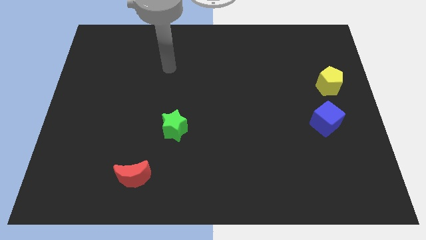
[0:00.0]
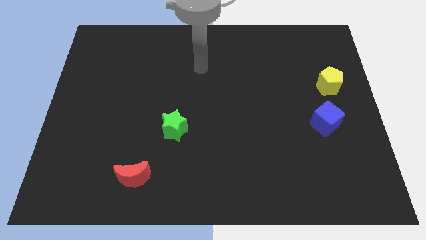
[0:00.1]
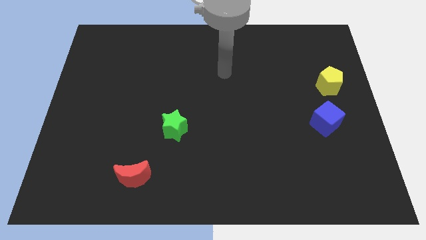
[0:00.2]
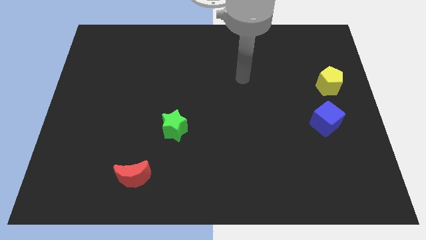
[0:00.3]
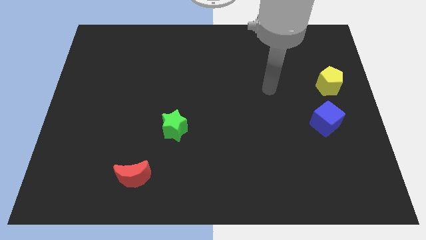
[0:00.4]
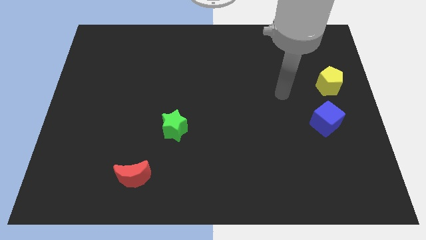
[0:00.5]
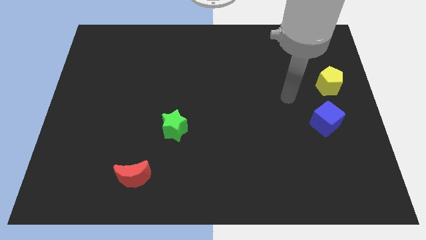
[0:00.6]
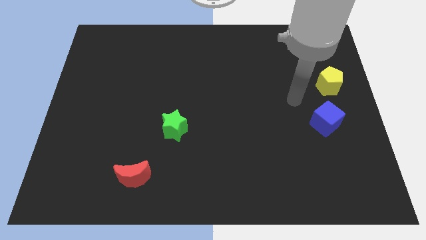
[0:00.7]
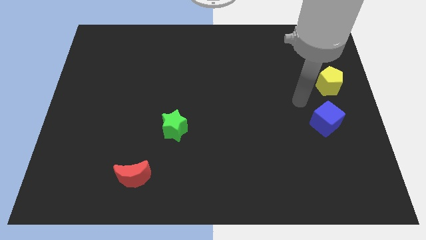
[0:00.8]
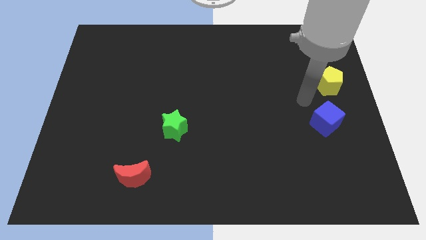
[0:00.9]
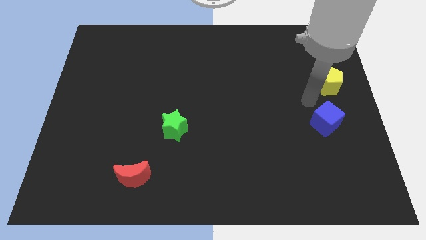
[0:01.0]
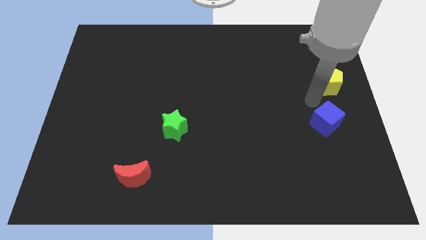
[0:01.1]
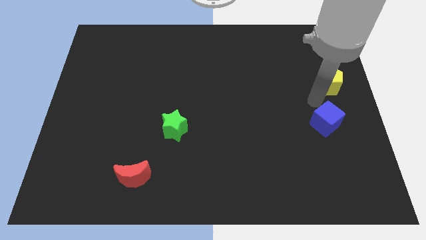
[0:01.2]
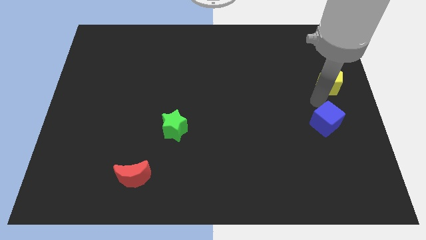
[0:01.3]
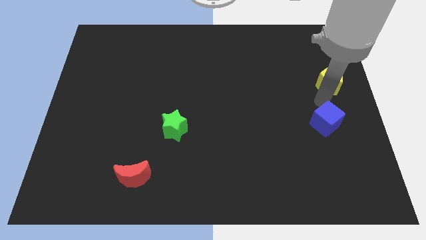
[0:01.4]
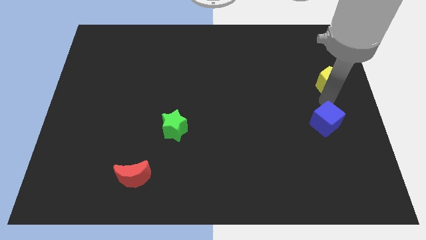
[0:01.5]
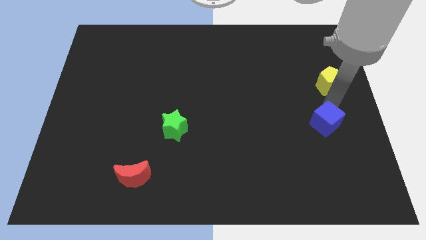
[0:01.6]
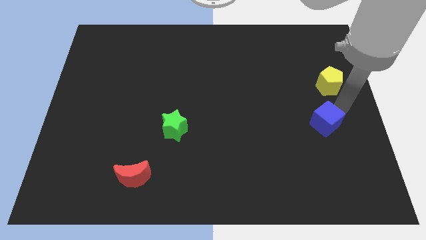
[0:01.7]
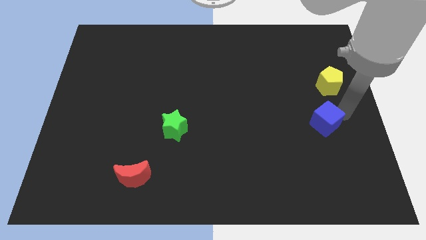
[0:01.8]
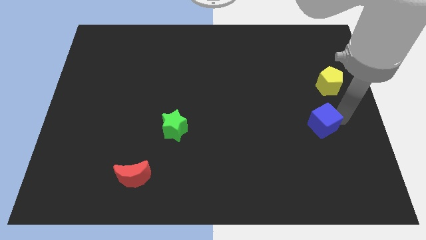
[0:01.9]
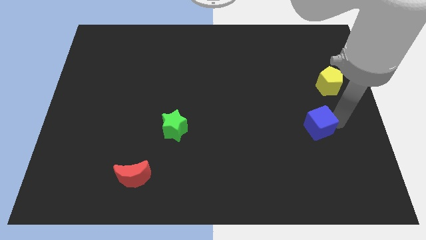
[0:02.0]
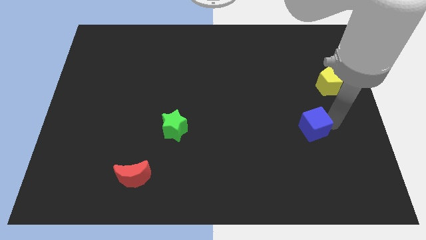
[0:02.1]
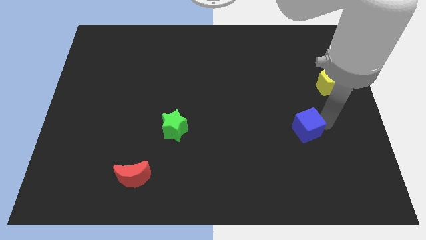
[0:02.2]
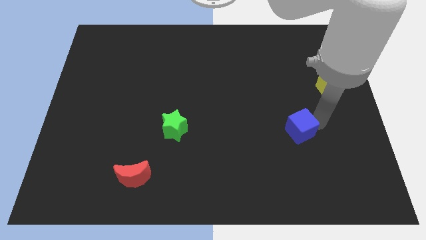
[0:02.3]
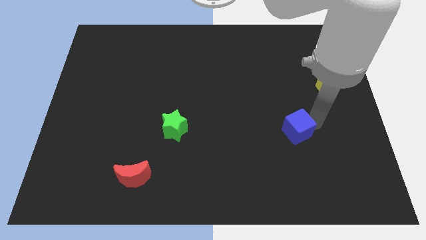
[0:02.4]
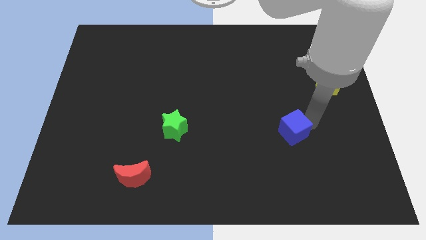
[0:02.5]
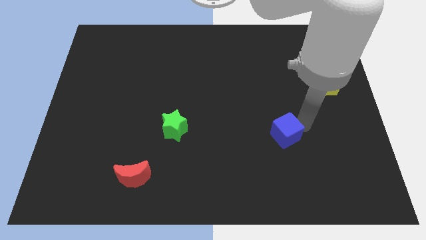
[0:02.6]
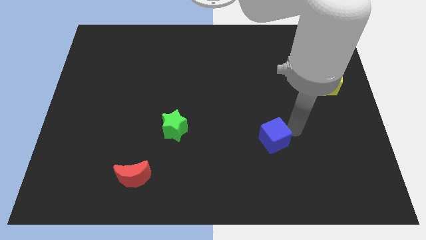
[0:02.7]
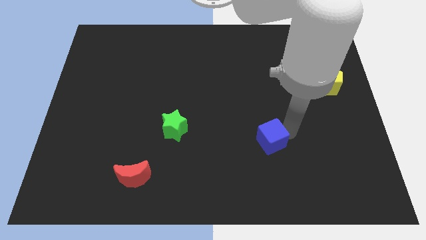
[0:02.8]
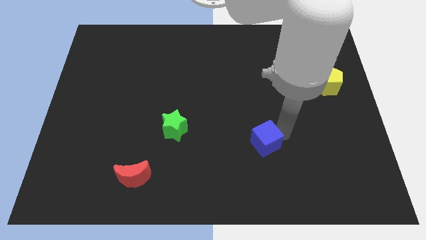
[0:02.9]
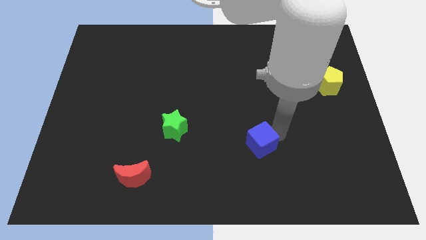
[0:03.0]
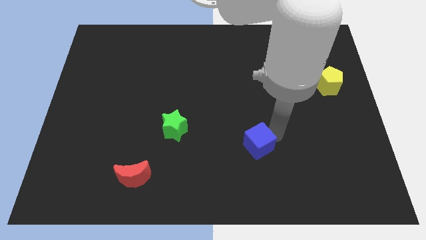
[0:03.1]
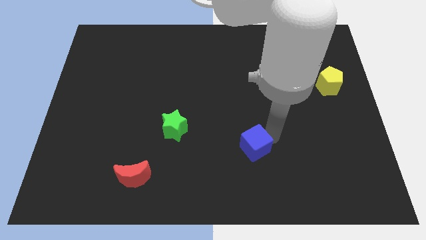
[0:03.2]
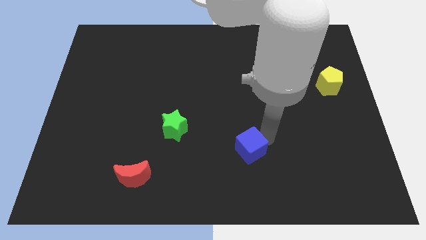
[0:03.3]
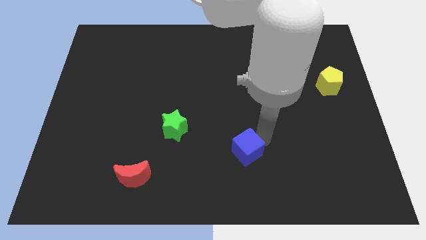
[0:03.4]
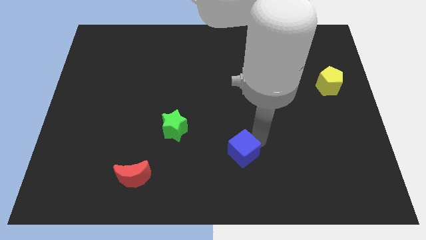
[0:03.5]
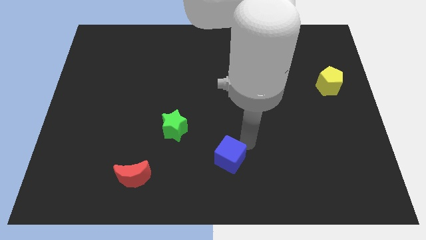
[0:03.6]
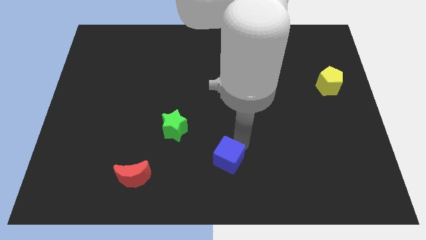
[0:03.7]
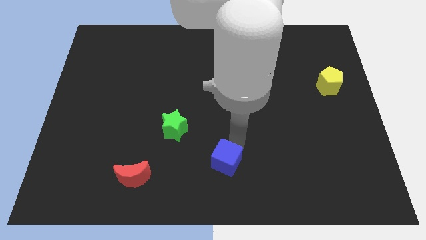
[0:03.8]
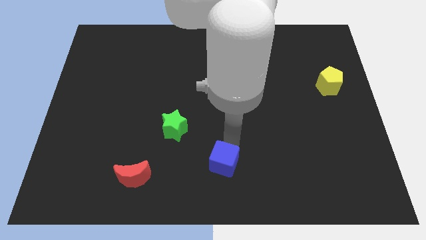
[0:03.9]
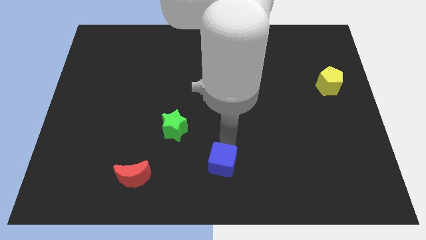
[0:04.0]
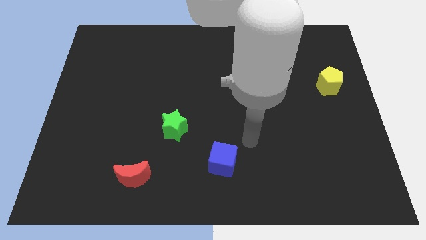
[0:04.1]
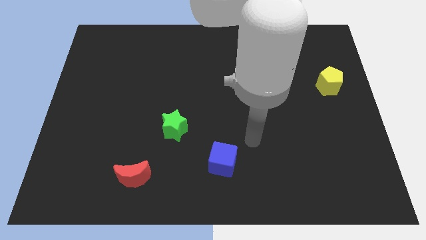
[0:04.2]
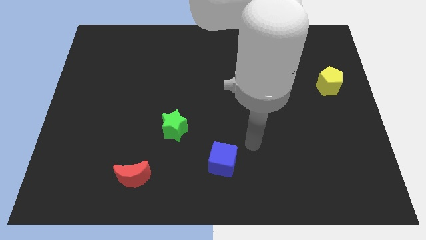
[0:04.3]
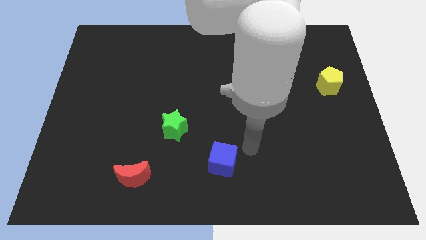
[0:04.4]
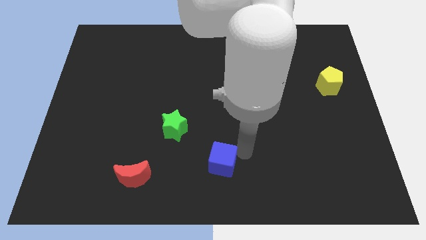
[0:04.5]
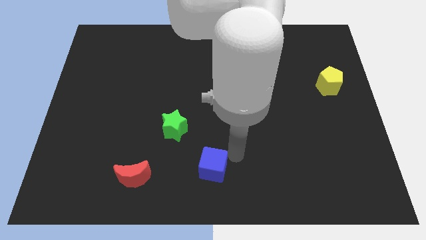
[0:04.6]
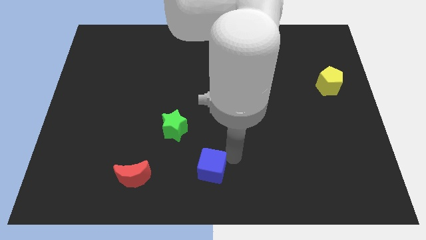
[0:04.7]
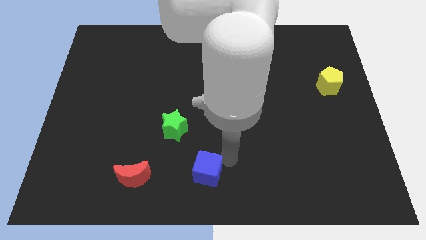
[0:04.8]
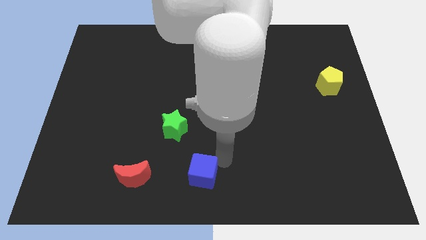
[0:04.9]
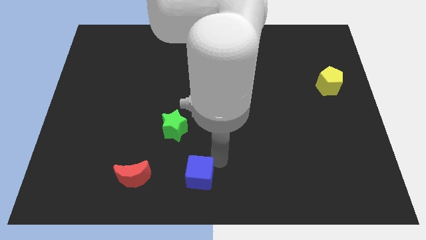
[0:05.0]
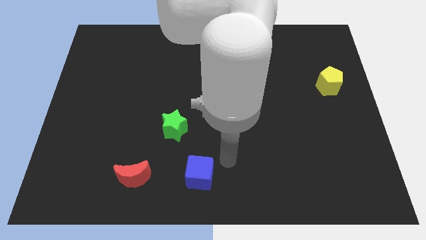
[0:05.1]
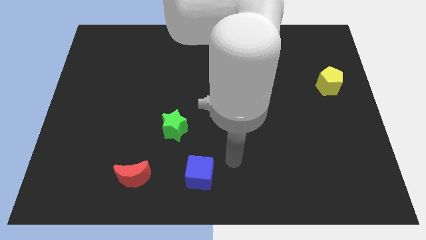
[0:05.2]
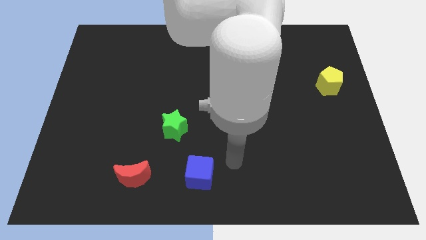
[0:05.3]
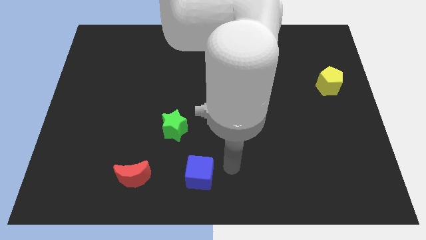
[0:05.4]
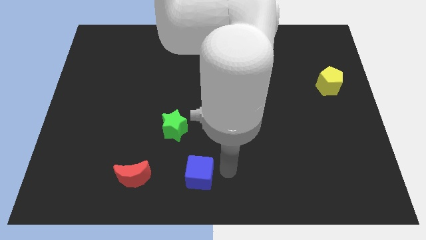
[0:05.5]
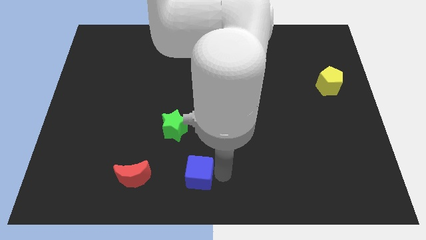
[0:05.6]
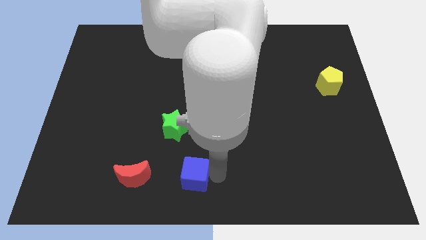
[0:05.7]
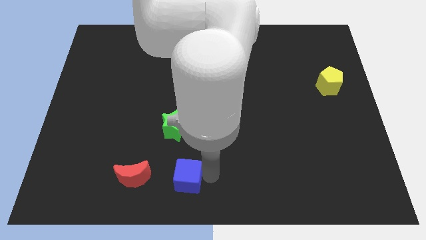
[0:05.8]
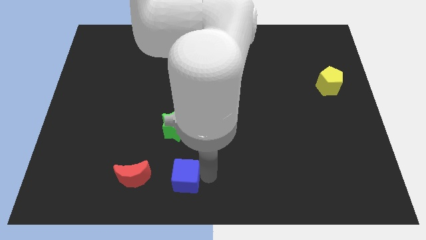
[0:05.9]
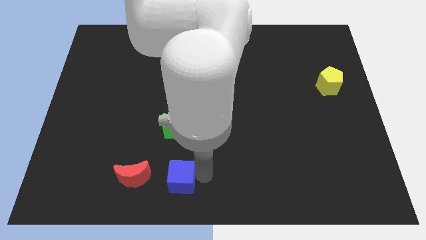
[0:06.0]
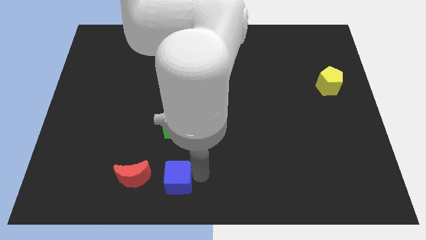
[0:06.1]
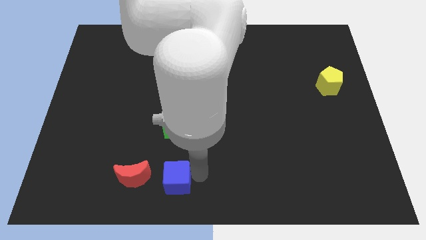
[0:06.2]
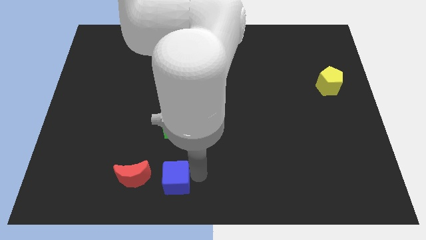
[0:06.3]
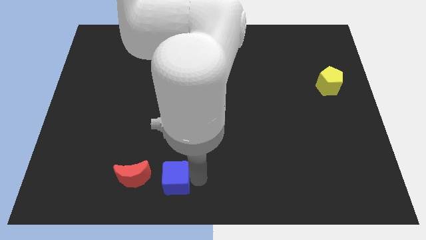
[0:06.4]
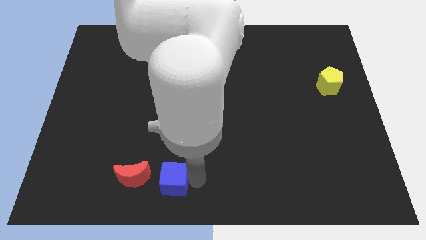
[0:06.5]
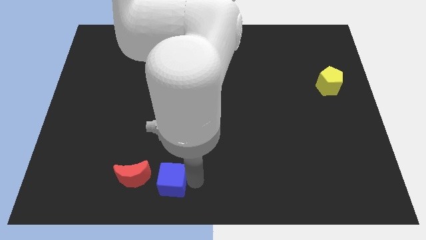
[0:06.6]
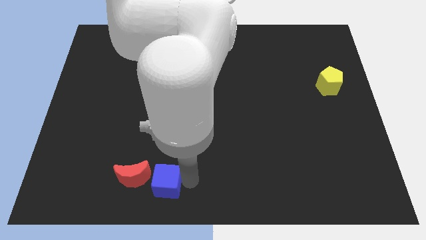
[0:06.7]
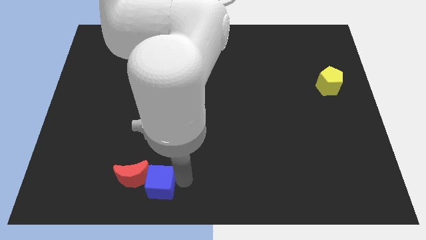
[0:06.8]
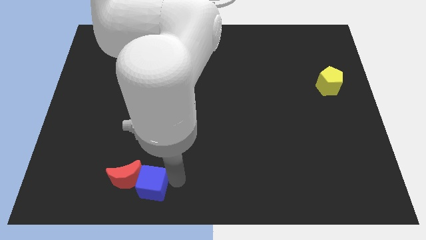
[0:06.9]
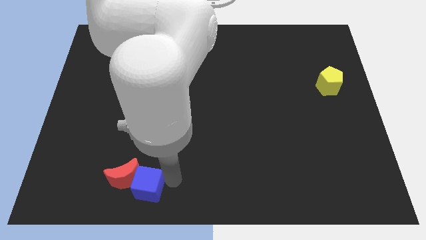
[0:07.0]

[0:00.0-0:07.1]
slide the blue block to the moon

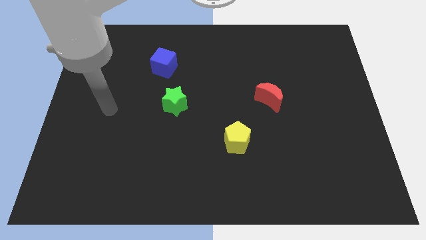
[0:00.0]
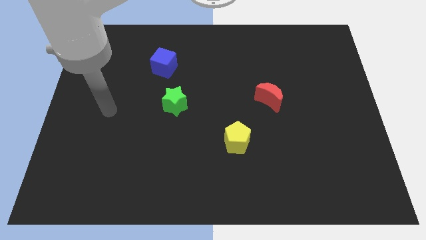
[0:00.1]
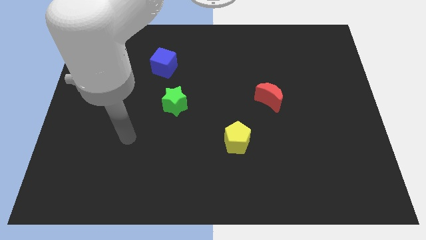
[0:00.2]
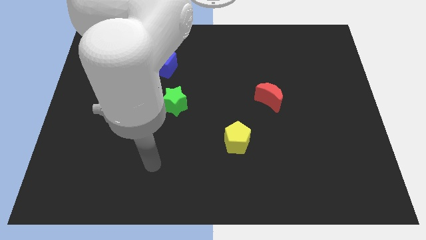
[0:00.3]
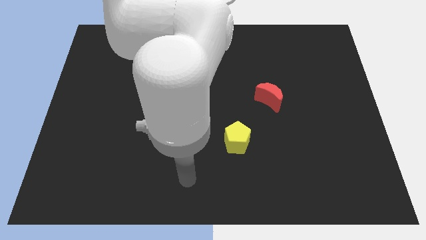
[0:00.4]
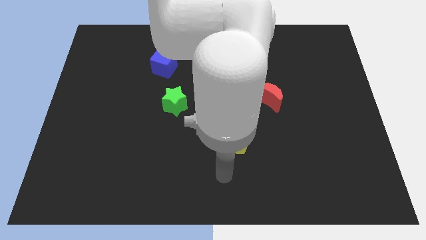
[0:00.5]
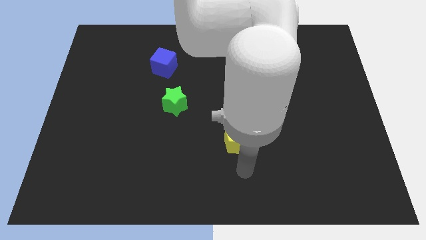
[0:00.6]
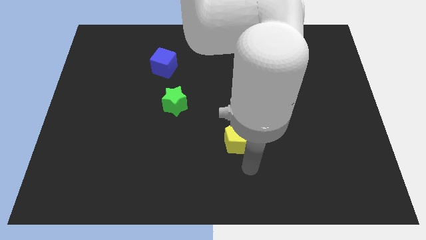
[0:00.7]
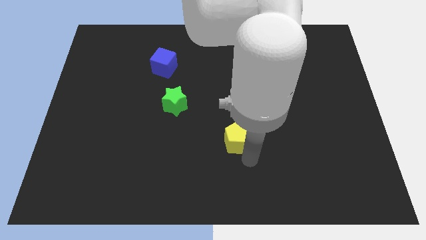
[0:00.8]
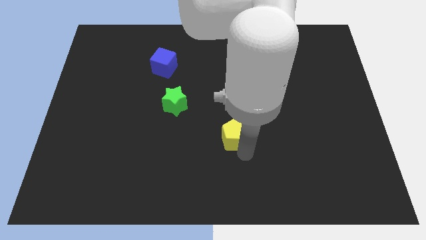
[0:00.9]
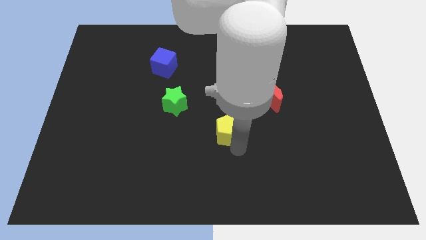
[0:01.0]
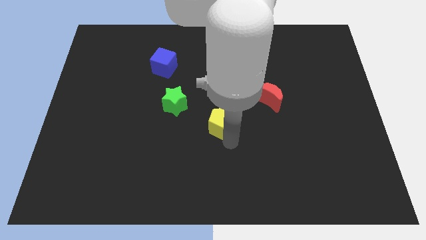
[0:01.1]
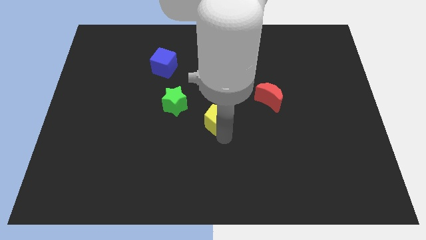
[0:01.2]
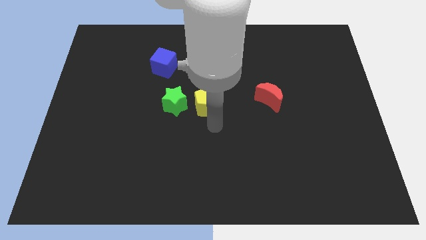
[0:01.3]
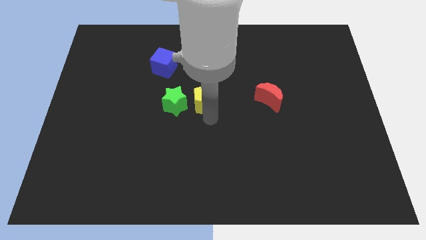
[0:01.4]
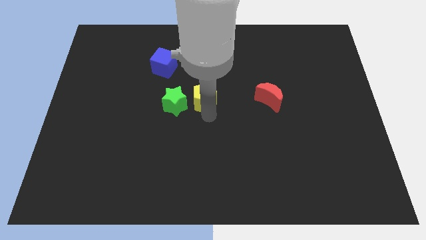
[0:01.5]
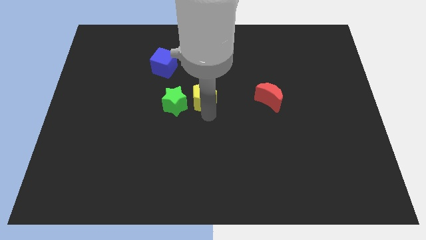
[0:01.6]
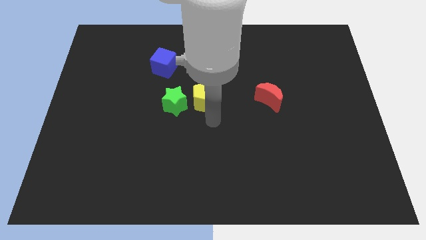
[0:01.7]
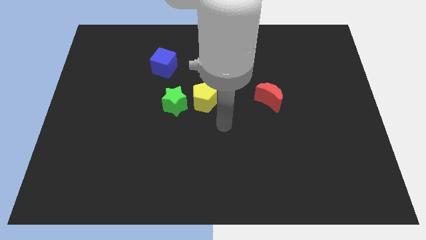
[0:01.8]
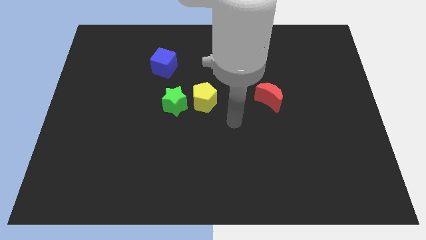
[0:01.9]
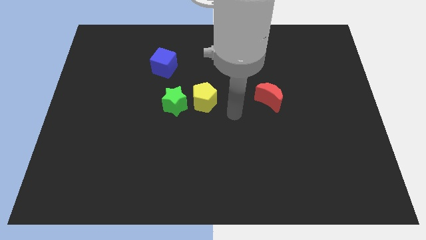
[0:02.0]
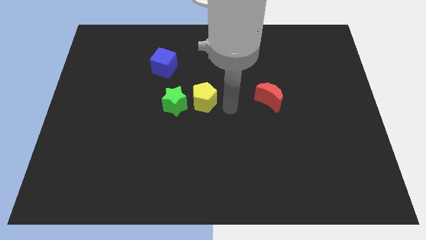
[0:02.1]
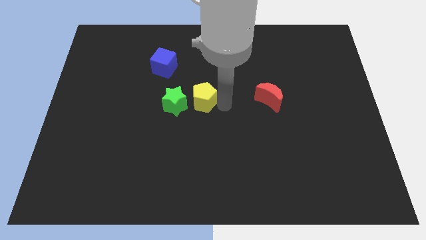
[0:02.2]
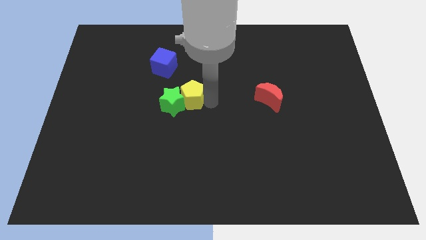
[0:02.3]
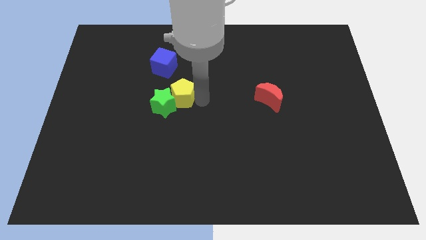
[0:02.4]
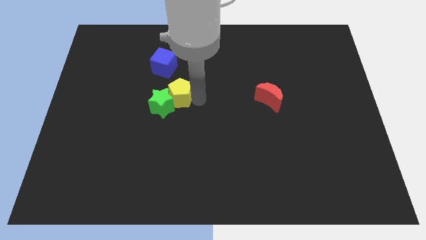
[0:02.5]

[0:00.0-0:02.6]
push the yellow pentagon towards the green block
